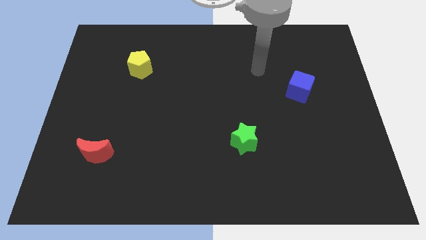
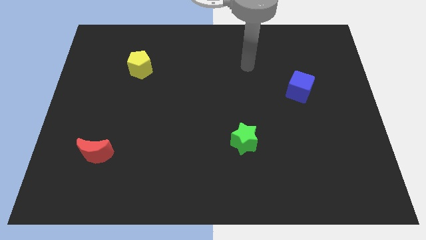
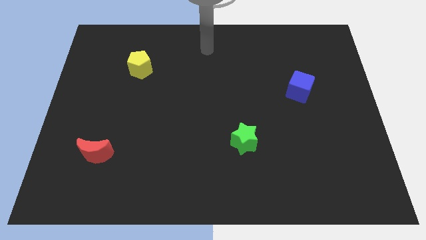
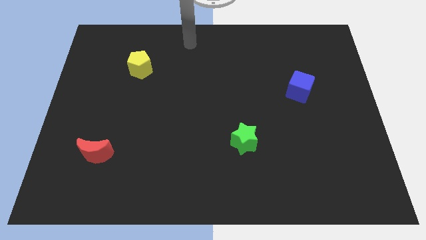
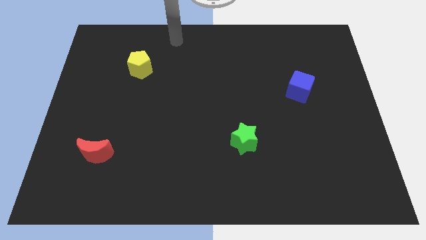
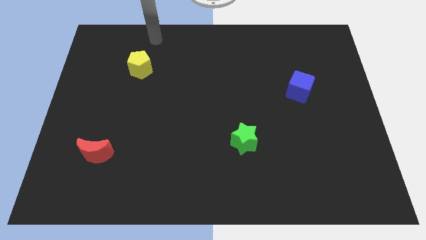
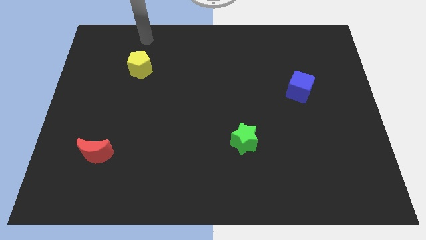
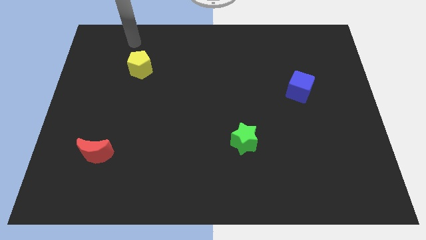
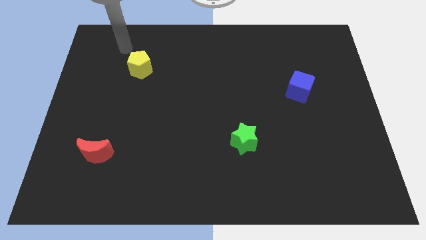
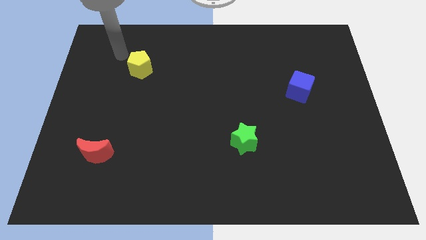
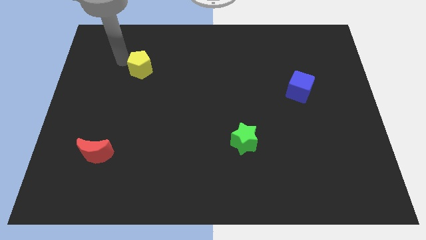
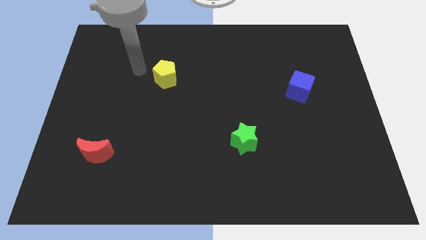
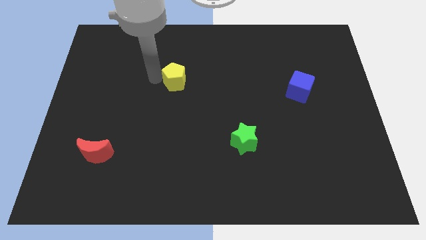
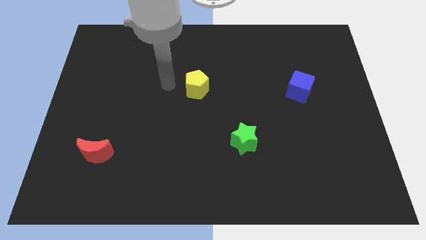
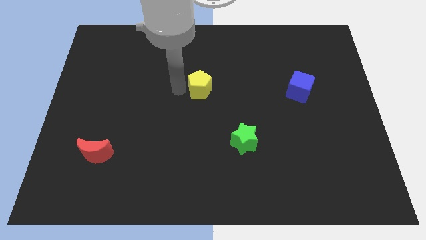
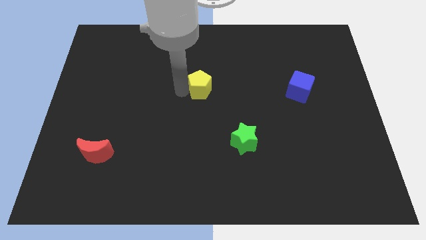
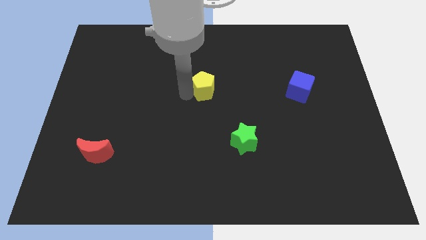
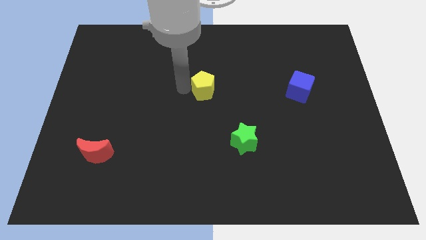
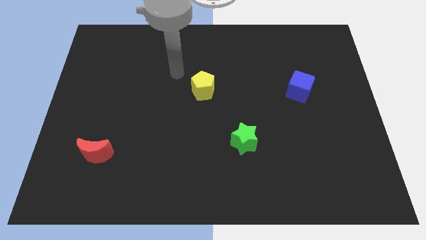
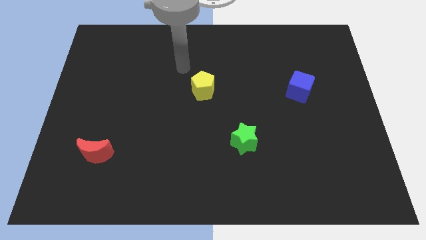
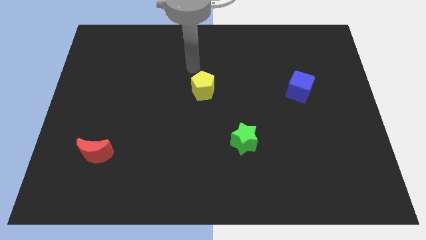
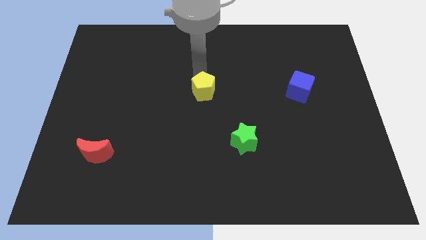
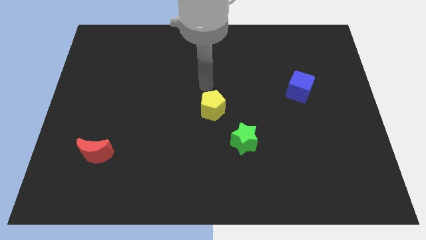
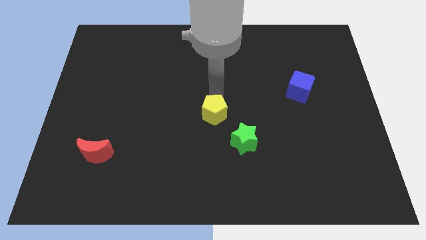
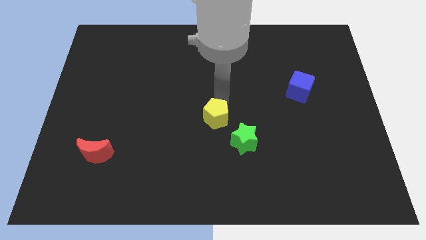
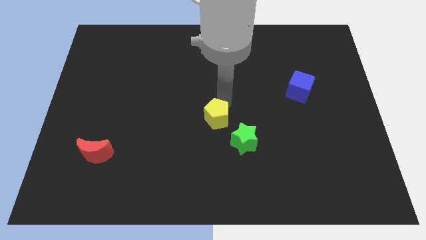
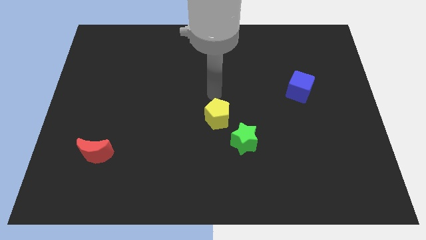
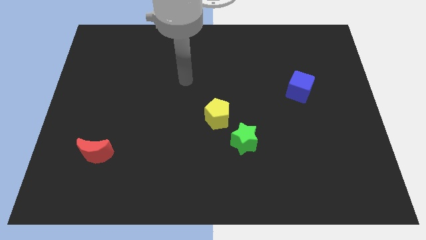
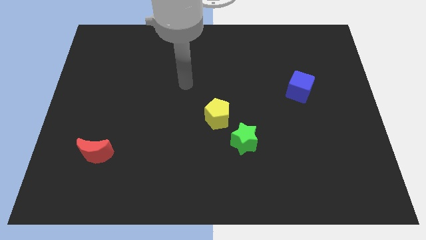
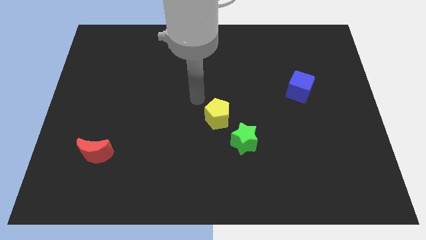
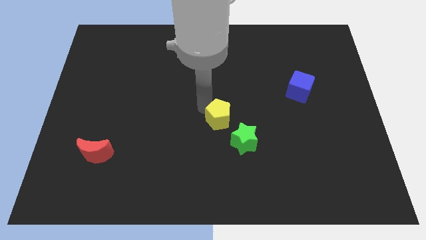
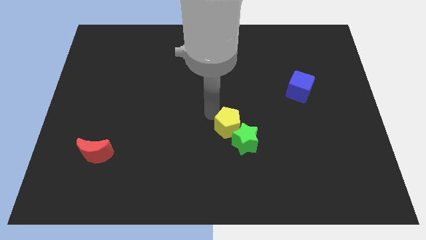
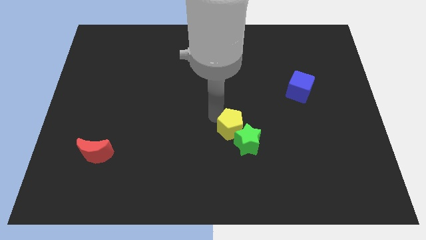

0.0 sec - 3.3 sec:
move the yellow pentagon next to the green block

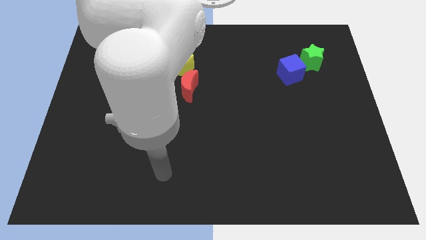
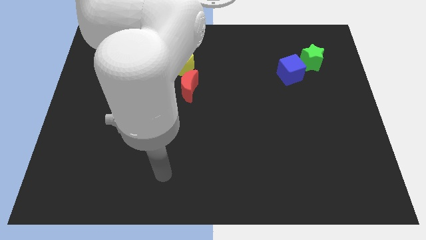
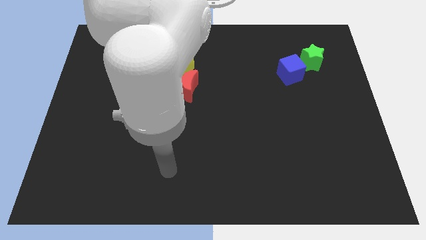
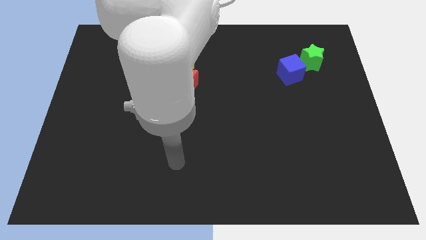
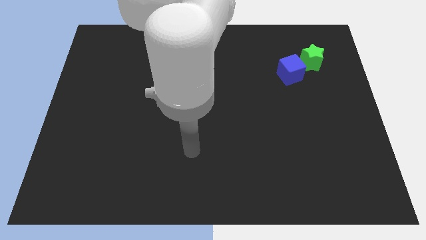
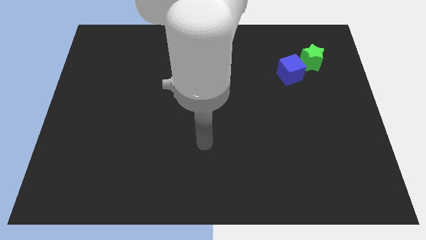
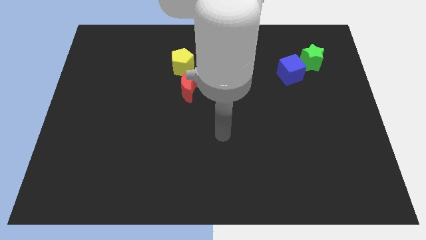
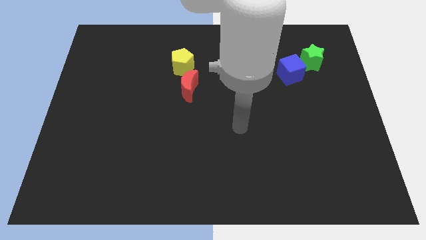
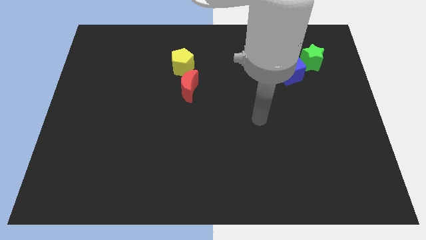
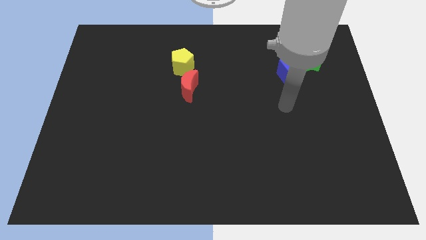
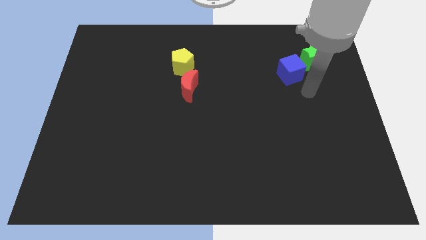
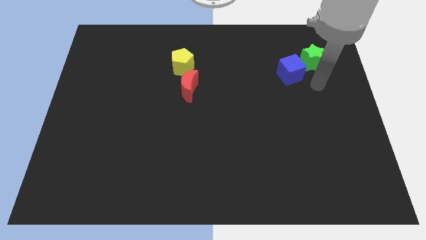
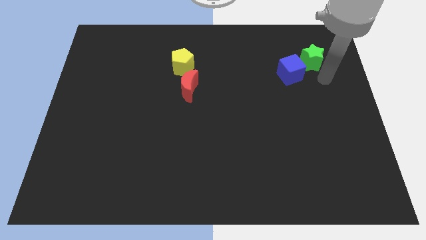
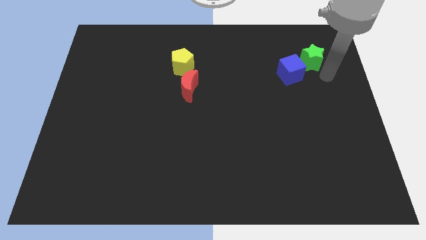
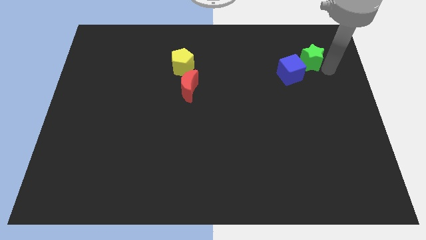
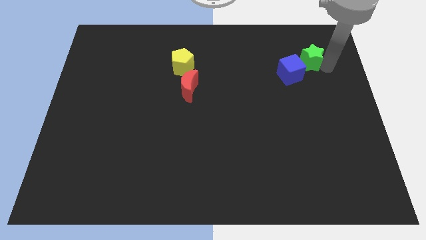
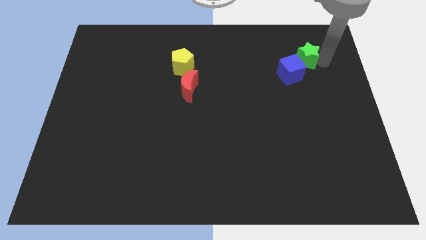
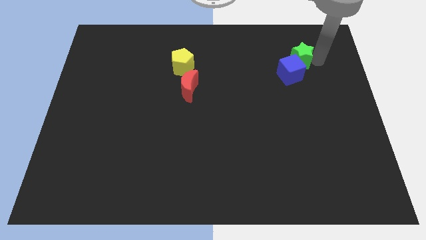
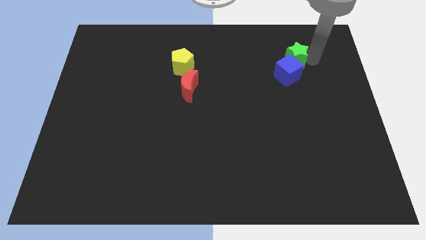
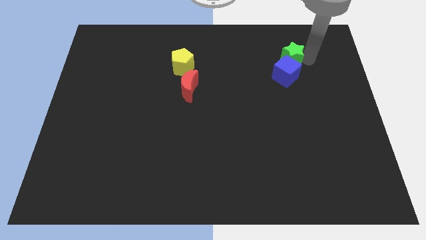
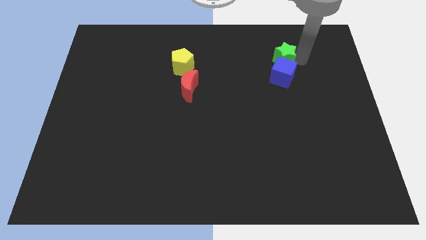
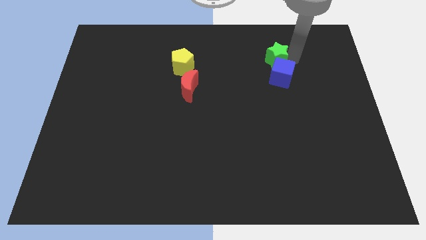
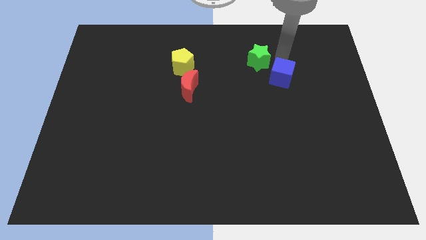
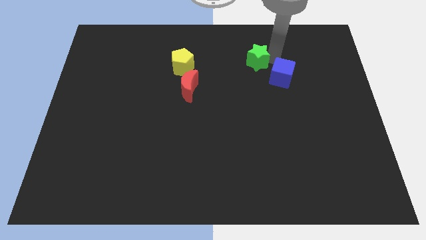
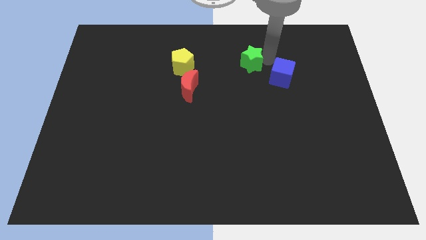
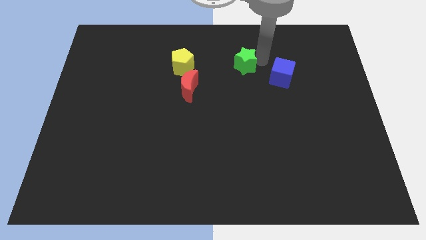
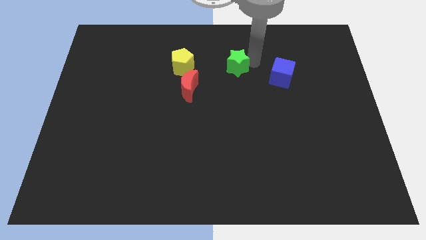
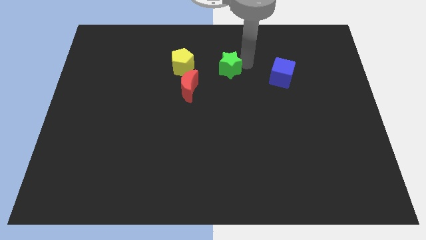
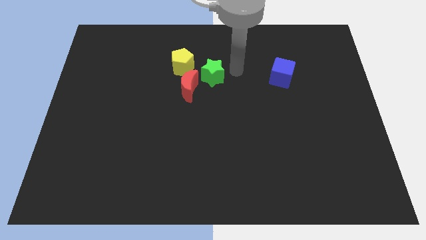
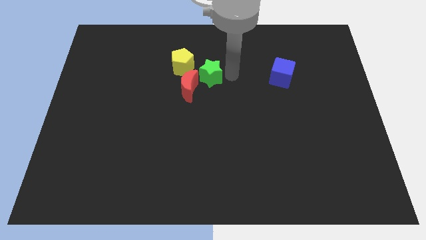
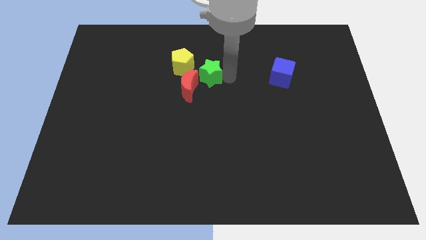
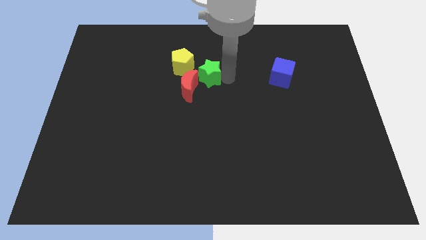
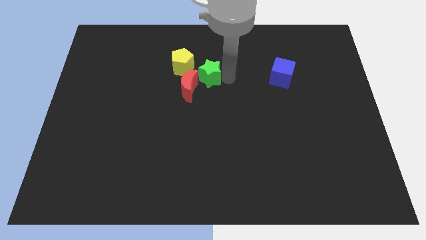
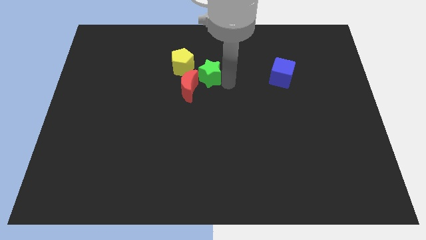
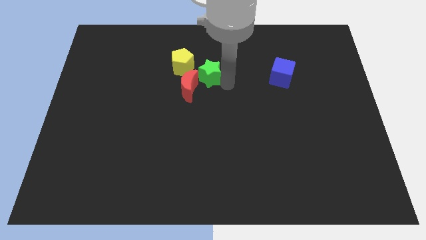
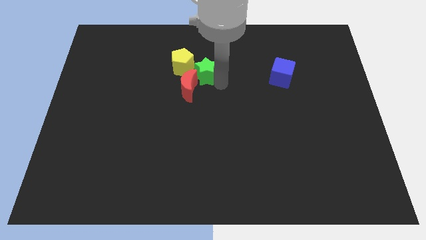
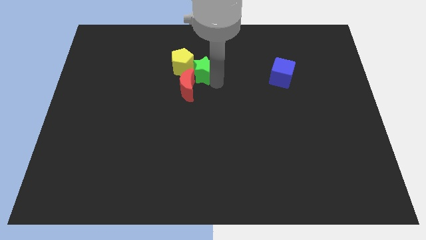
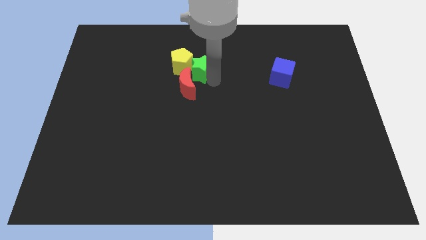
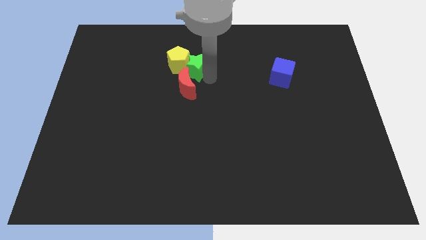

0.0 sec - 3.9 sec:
move the green block towards the yellow pentagon

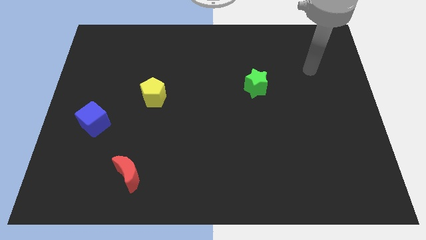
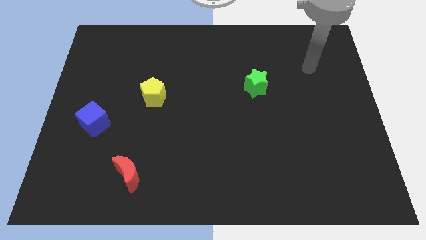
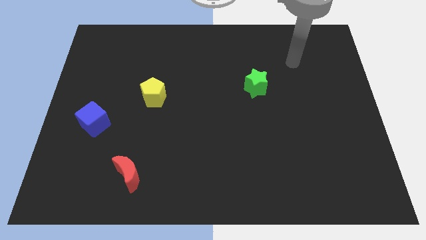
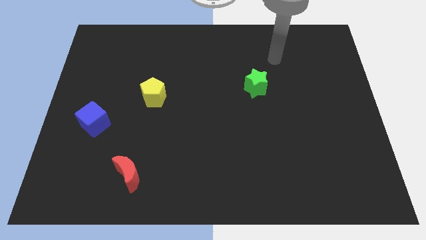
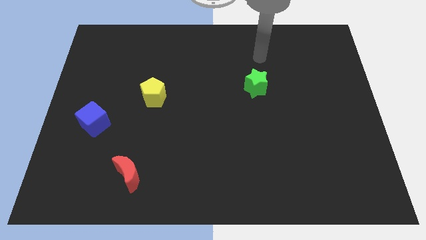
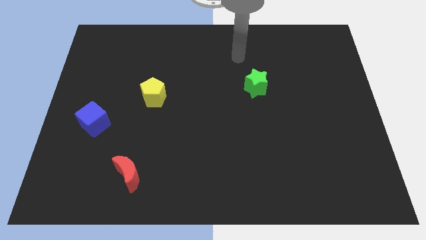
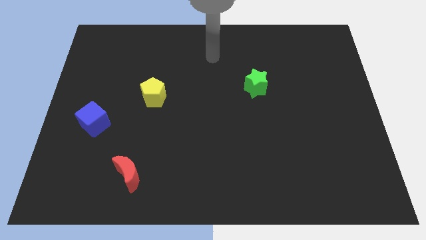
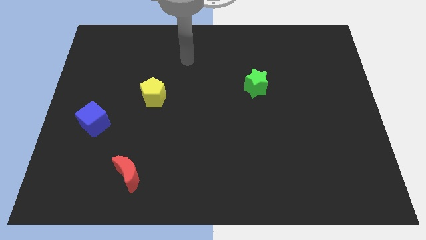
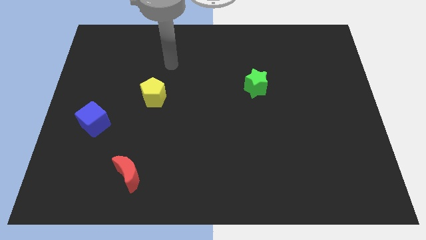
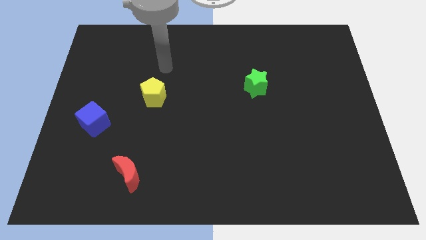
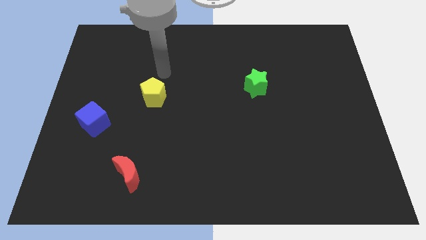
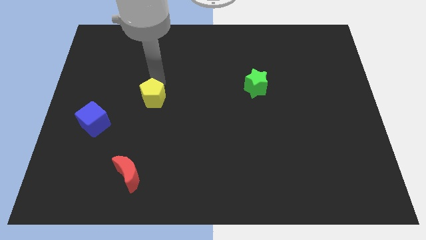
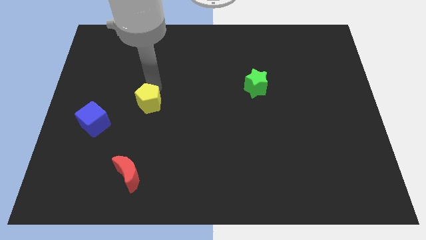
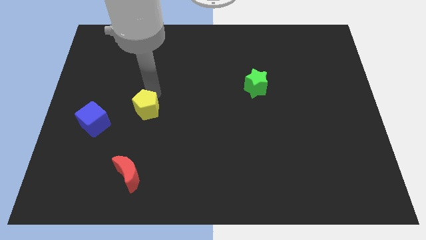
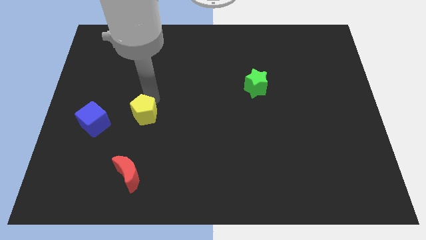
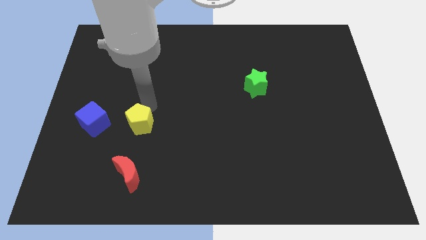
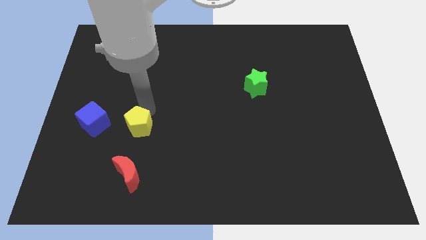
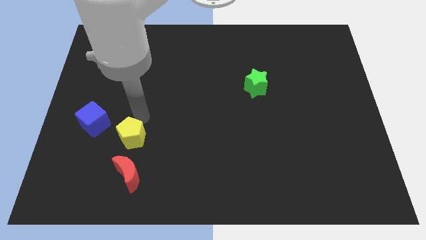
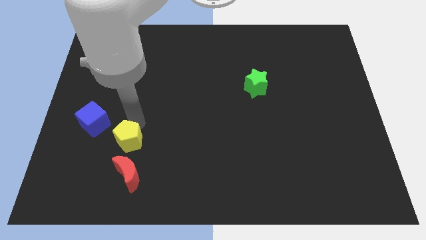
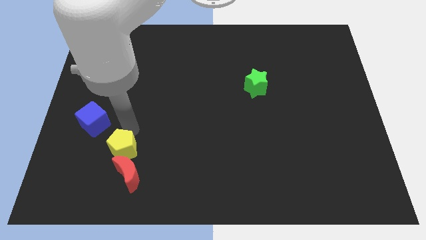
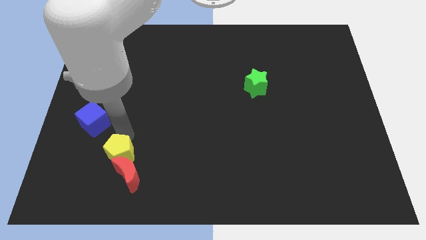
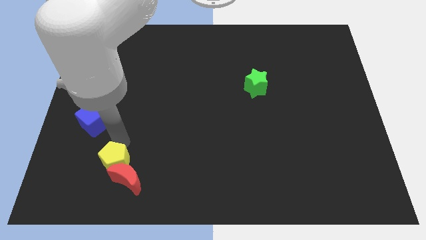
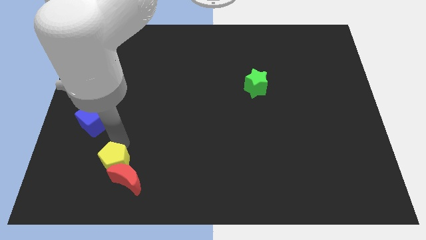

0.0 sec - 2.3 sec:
push the yellow pentagon next to the red moon
